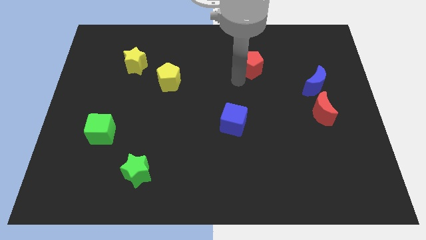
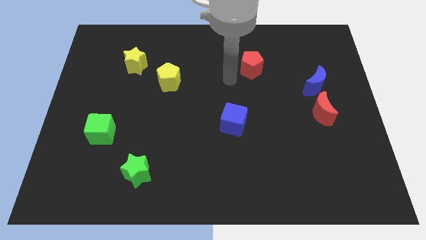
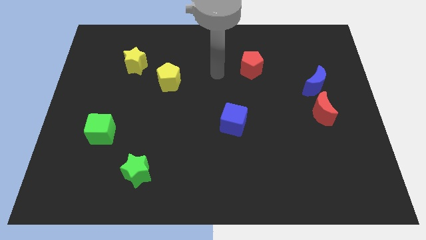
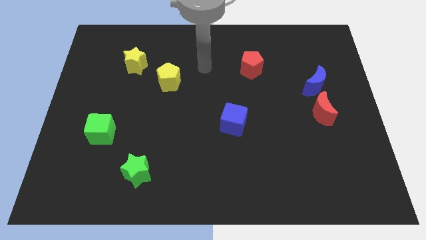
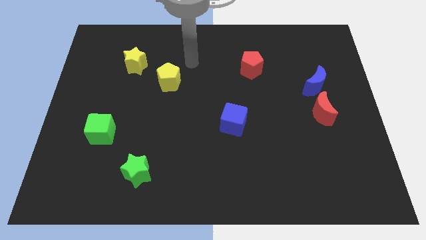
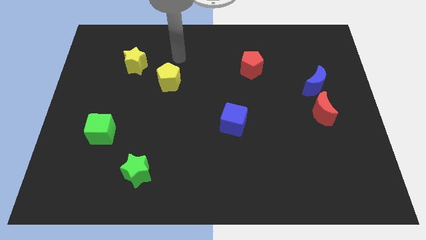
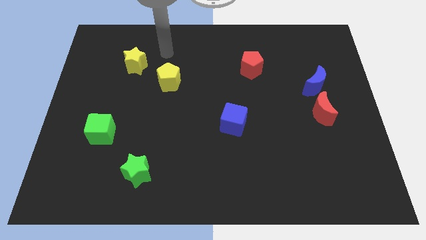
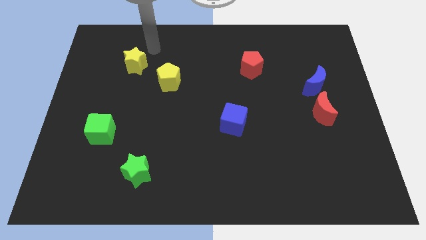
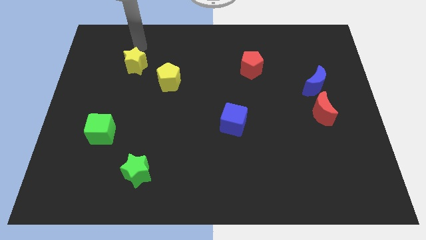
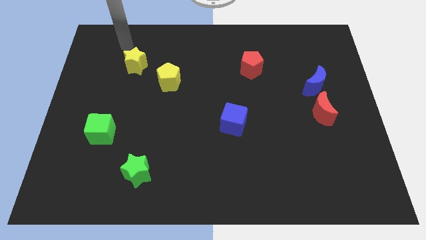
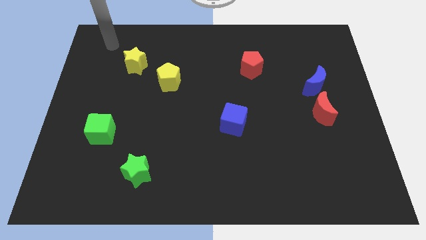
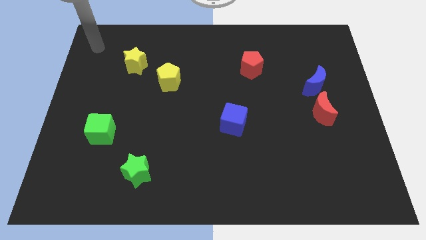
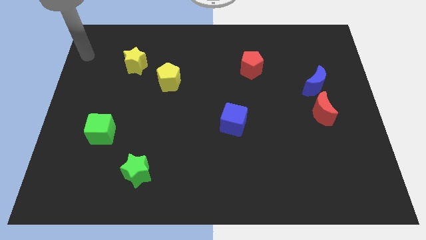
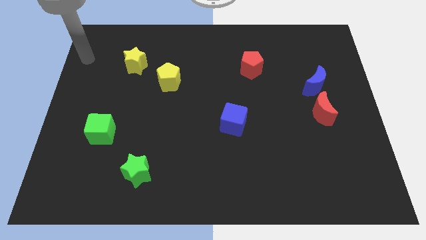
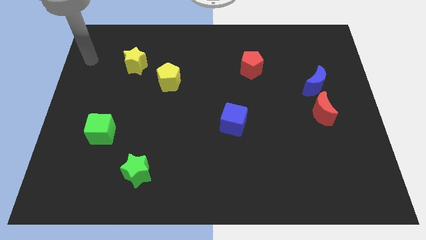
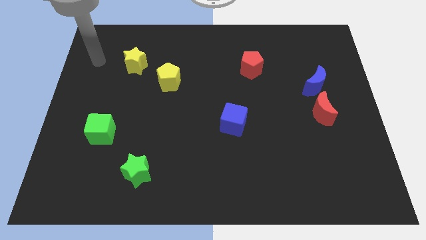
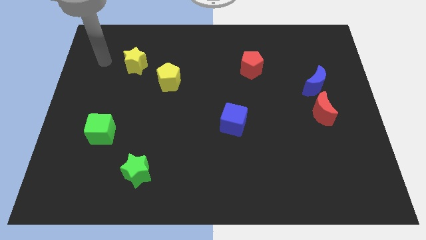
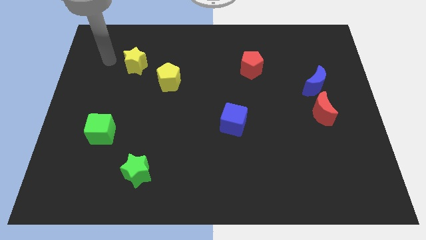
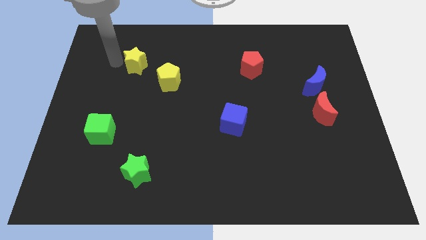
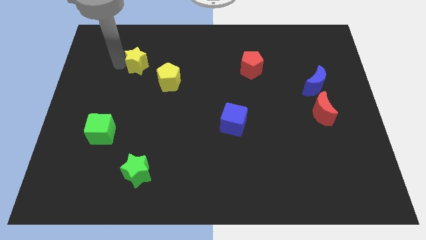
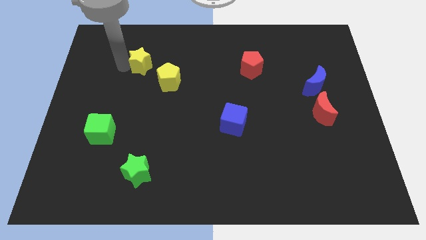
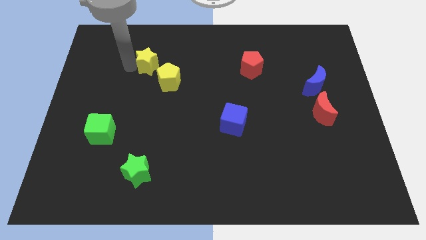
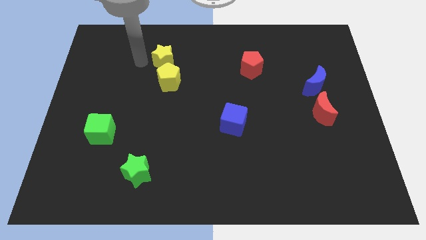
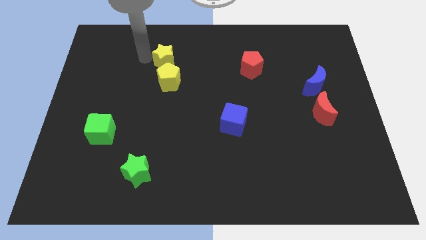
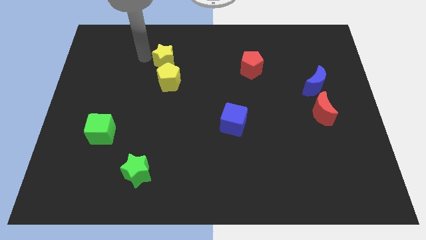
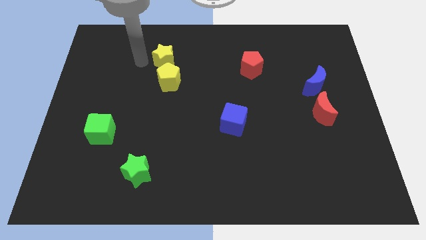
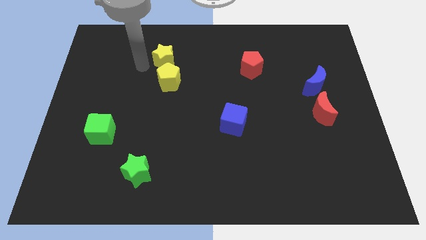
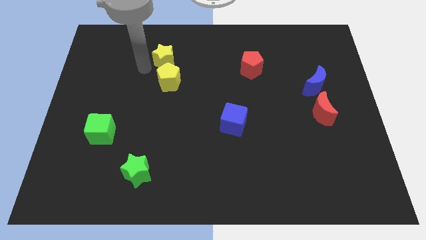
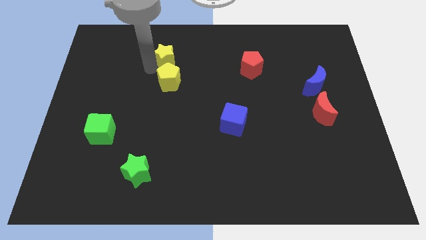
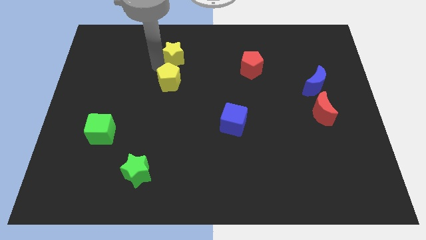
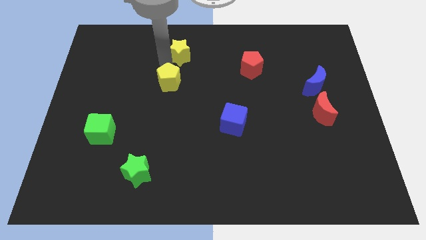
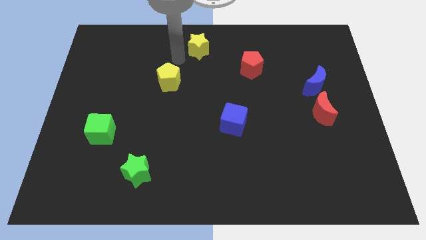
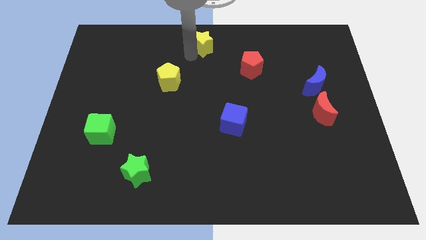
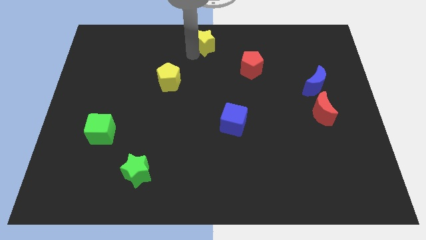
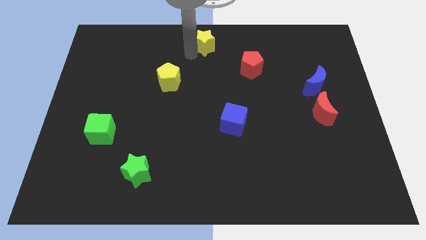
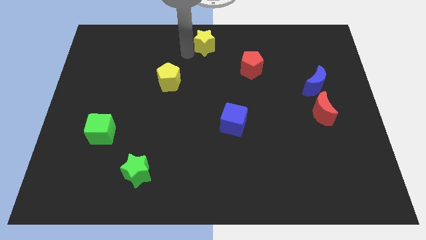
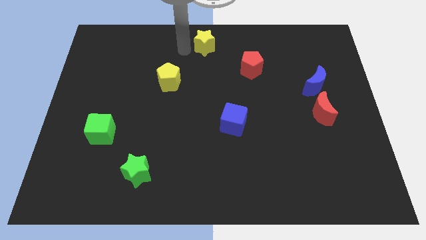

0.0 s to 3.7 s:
push the yellow star to the top right of the yellow pentagon

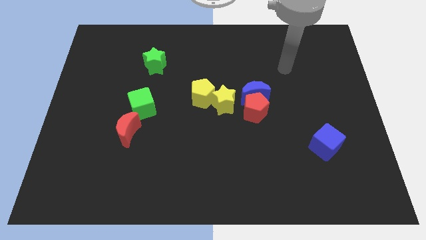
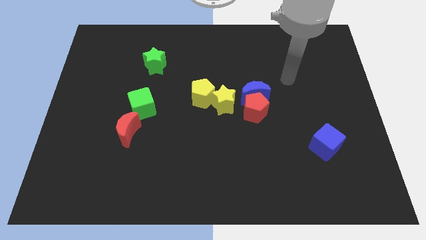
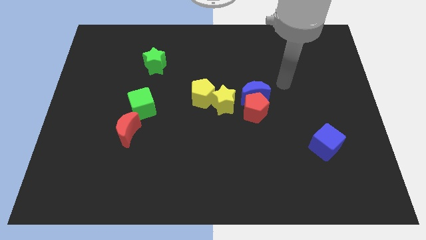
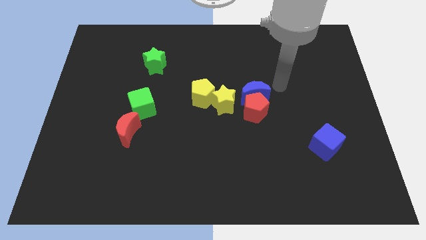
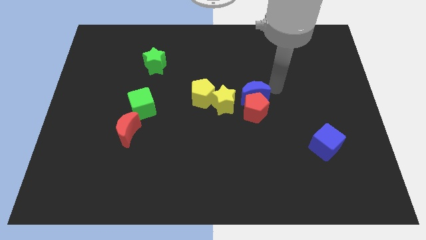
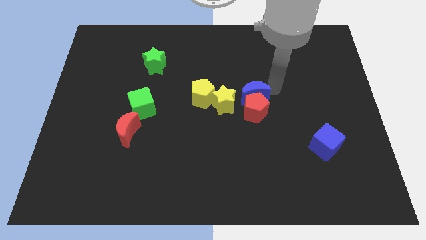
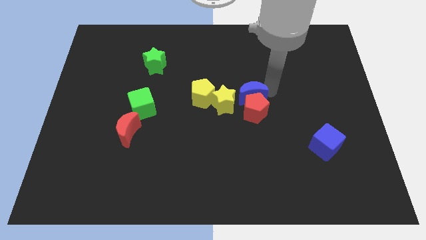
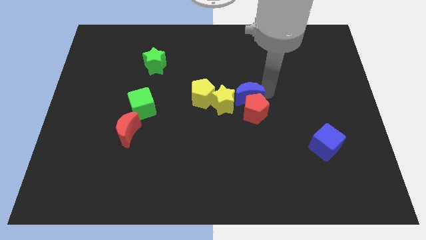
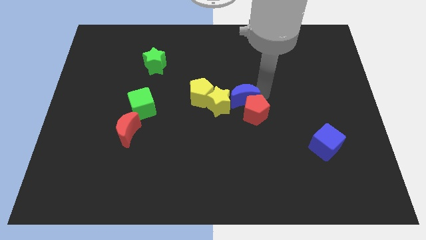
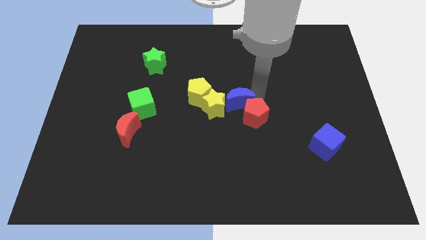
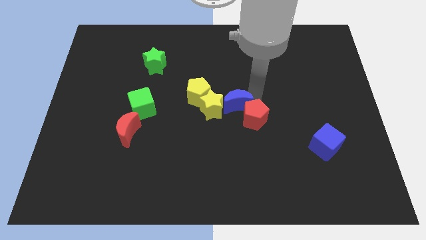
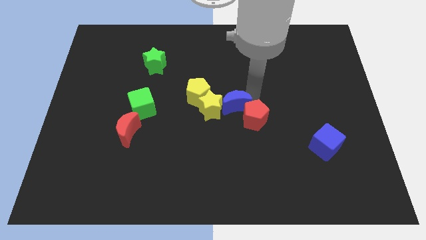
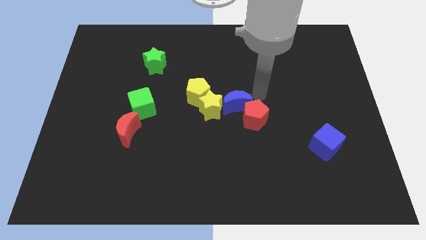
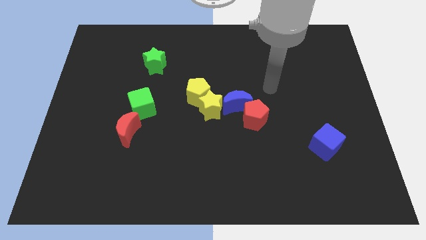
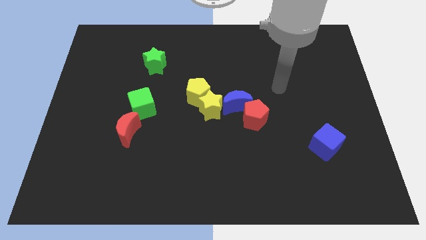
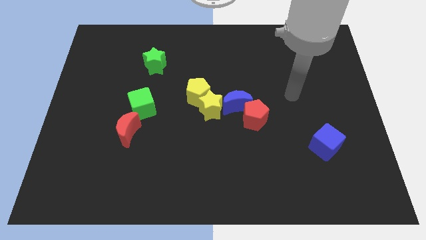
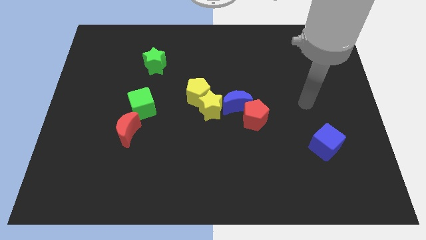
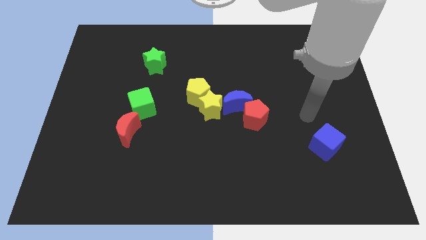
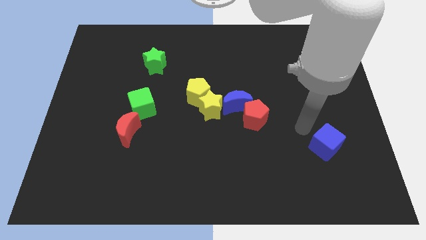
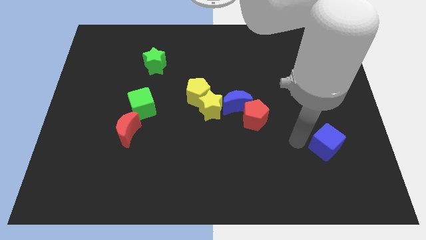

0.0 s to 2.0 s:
move your arm towards the left side of the blue cube

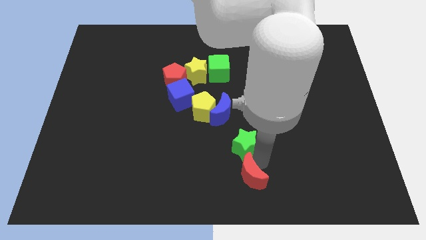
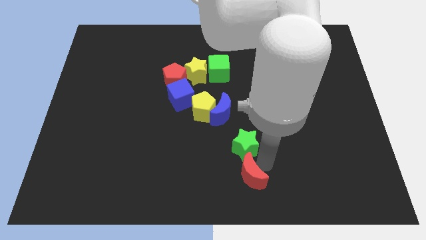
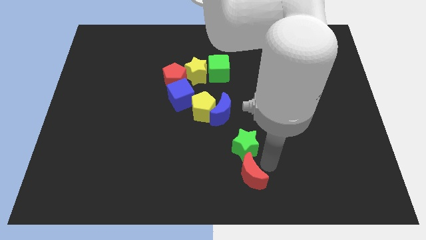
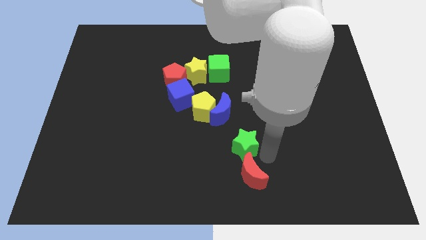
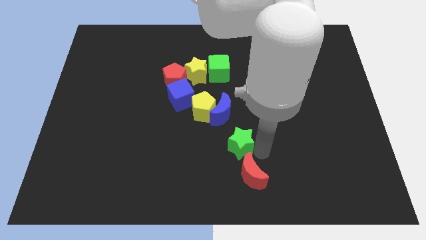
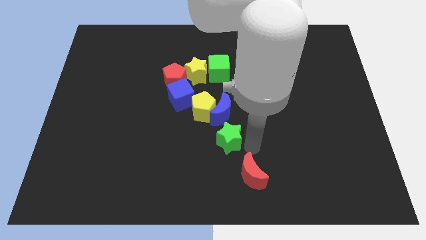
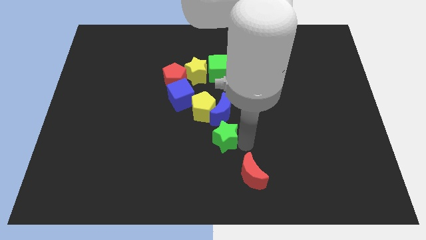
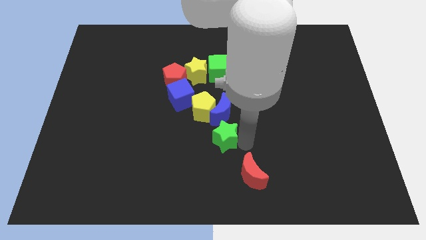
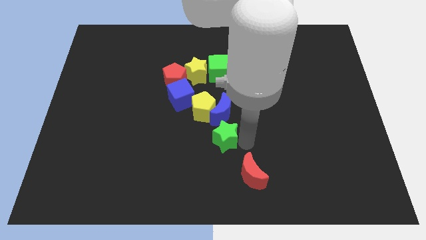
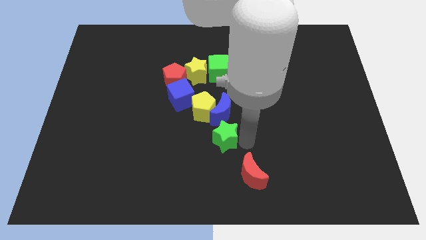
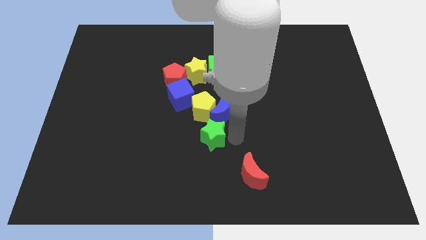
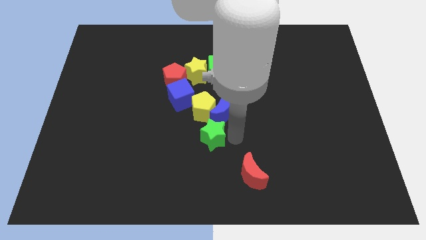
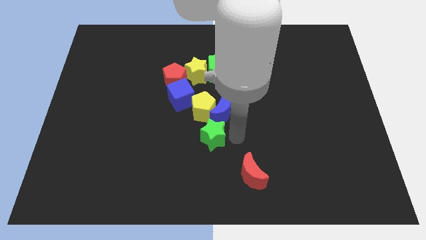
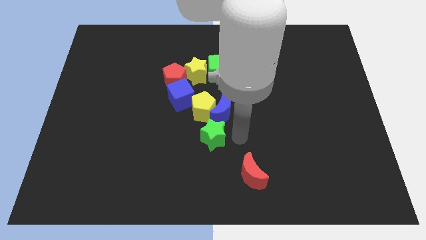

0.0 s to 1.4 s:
move the green star at the bottom side of the blue moon

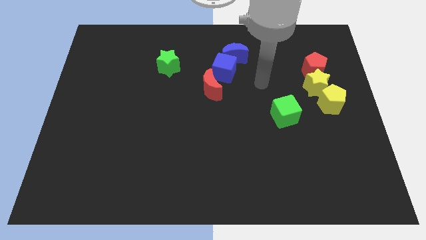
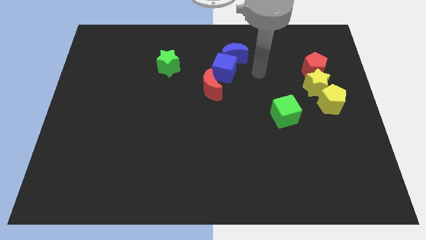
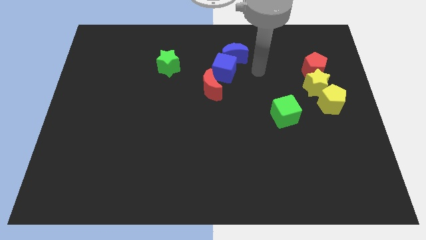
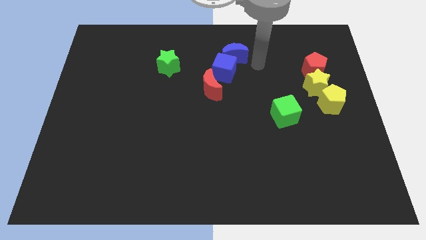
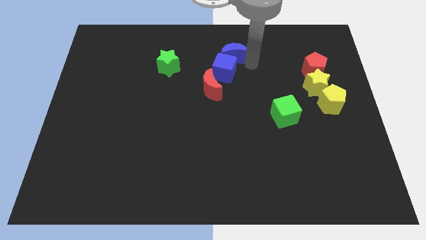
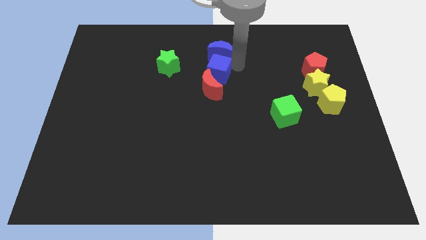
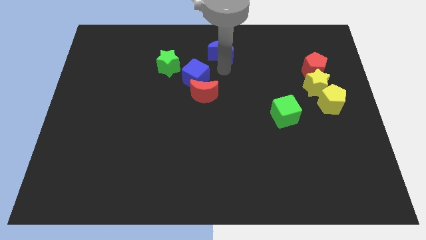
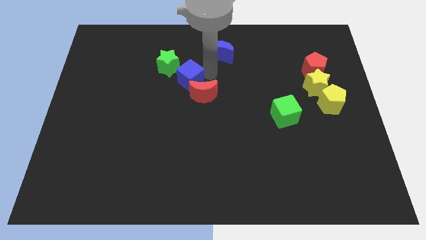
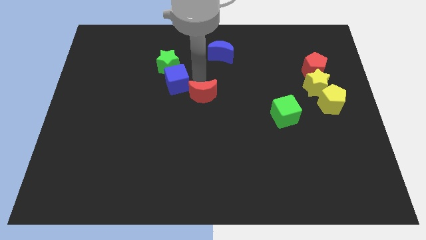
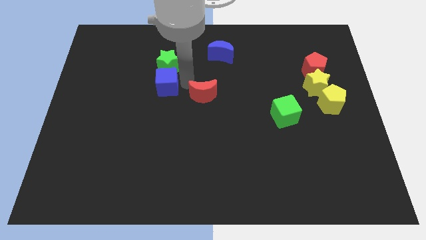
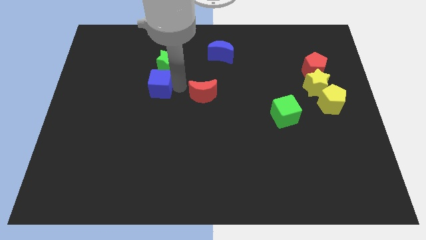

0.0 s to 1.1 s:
separate blue cube from the red crescent

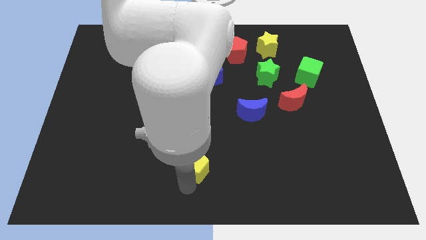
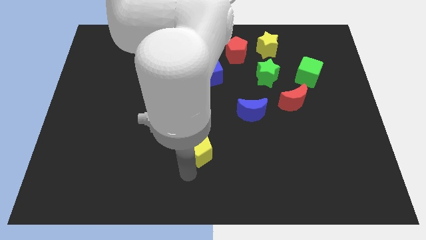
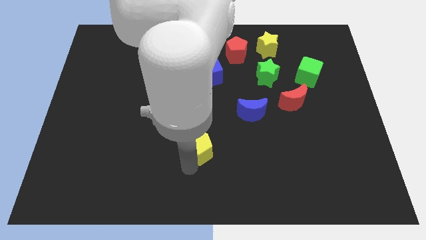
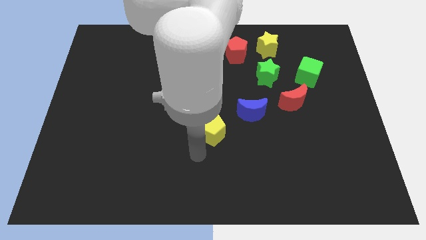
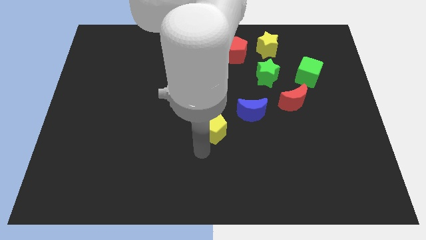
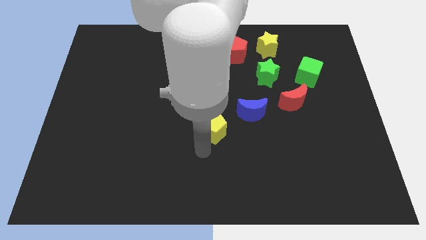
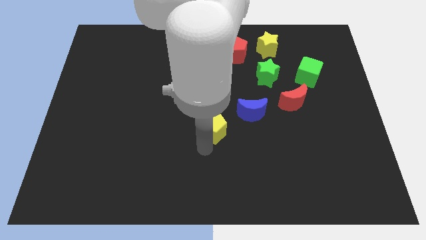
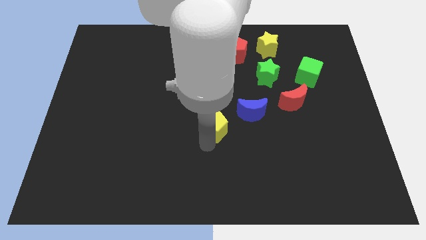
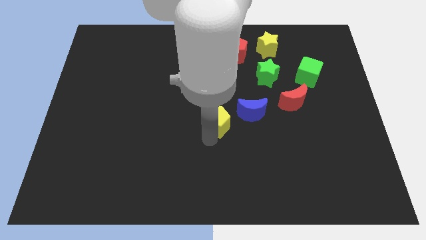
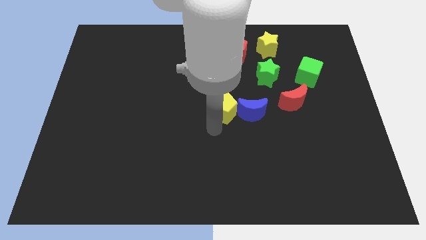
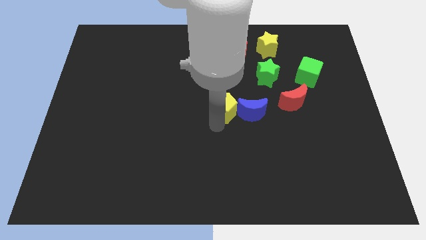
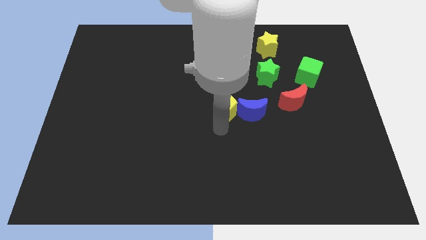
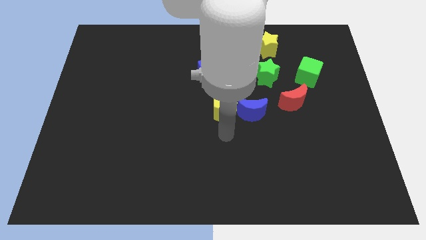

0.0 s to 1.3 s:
push the yellow pentagon into the blue crescent
